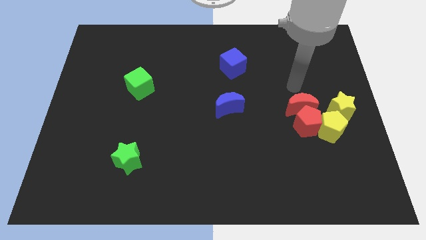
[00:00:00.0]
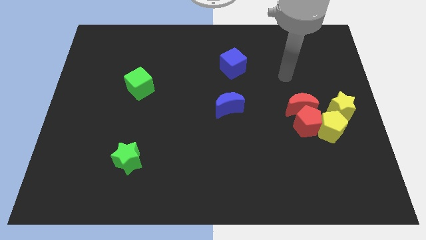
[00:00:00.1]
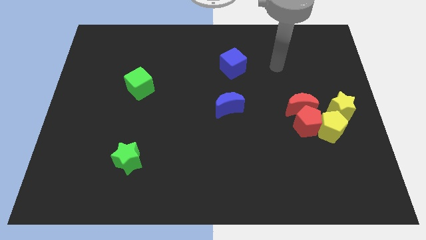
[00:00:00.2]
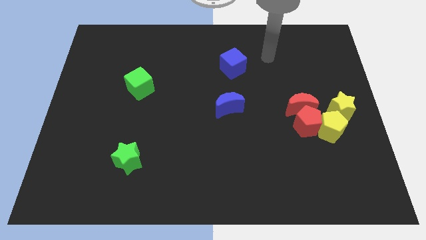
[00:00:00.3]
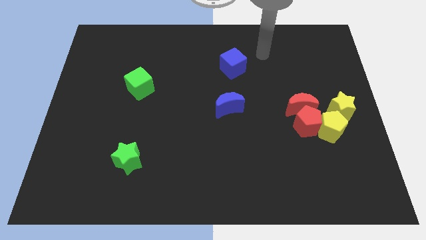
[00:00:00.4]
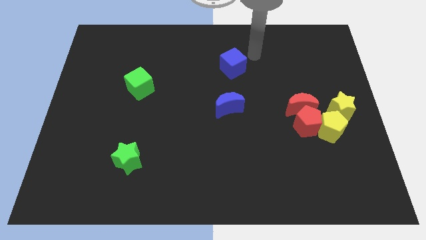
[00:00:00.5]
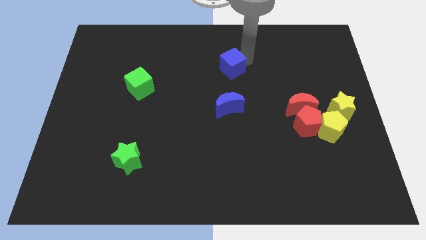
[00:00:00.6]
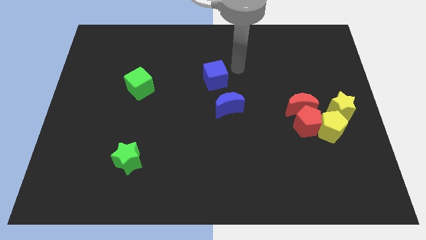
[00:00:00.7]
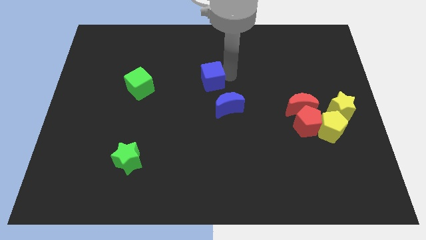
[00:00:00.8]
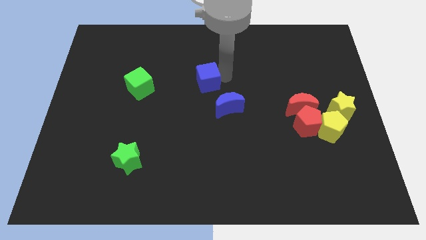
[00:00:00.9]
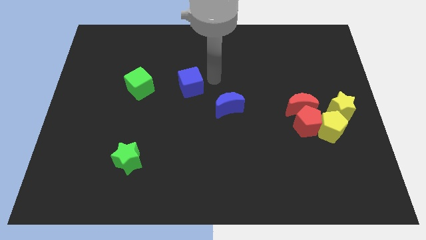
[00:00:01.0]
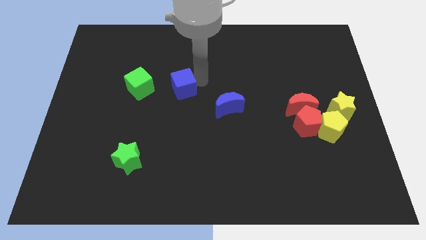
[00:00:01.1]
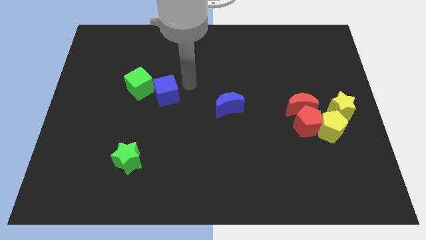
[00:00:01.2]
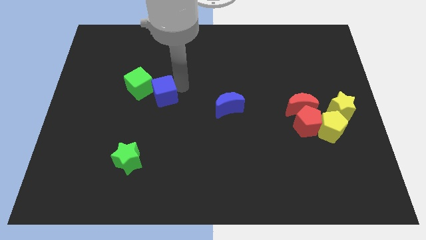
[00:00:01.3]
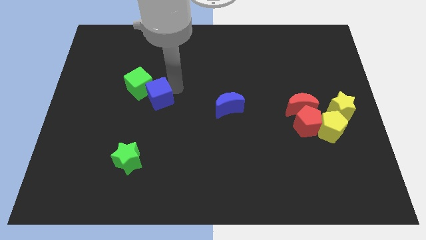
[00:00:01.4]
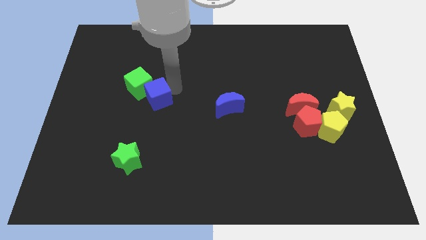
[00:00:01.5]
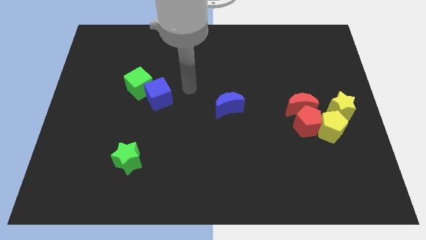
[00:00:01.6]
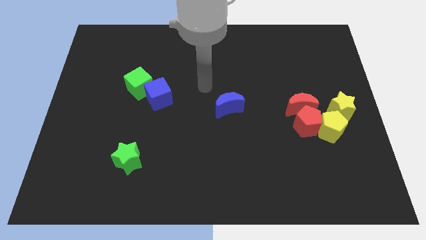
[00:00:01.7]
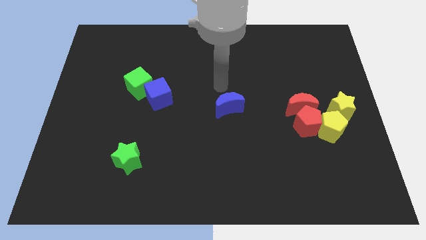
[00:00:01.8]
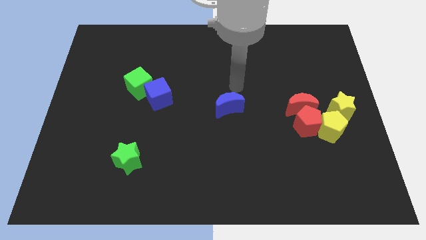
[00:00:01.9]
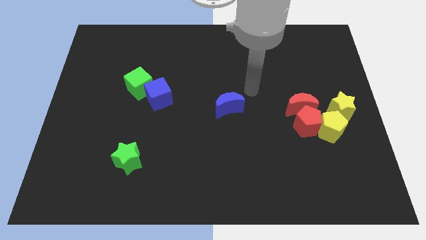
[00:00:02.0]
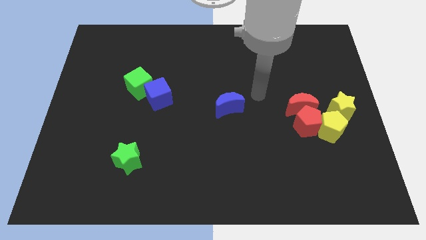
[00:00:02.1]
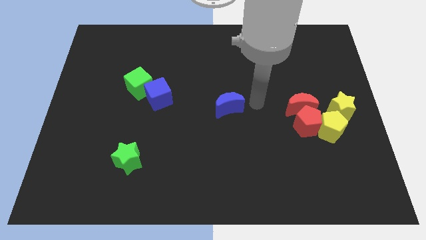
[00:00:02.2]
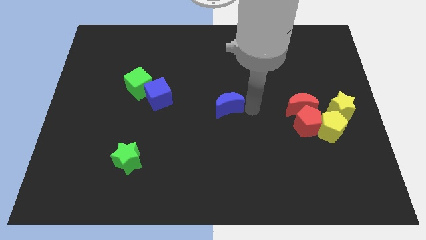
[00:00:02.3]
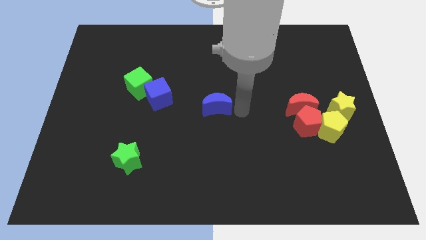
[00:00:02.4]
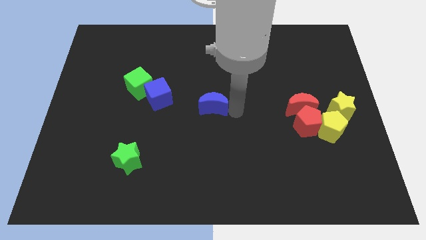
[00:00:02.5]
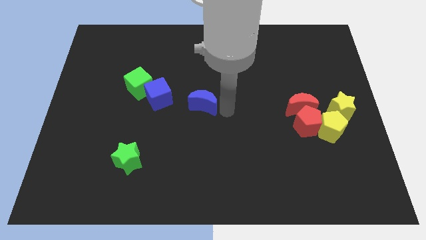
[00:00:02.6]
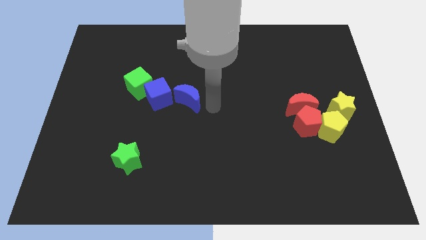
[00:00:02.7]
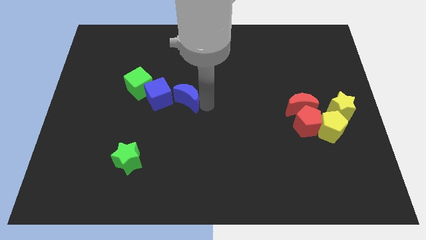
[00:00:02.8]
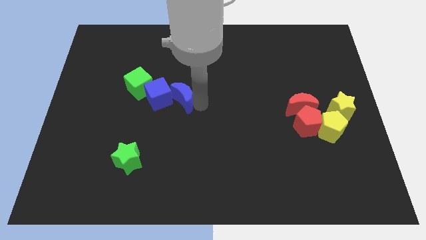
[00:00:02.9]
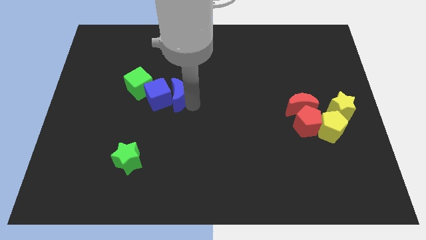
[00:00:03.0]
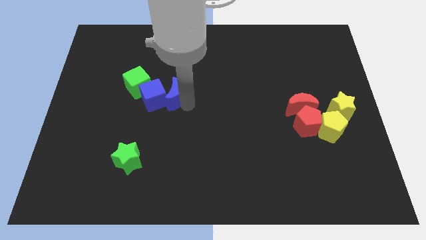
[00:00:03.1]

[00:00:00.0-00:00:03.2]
place the blue moon right to the blue cube

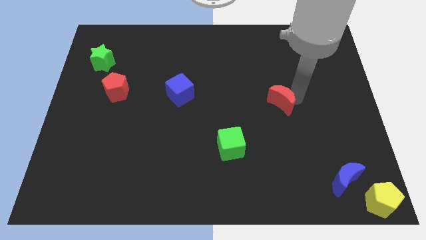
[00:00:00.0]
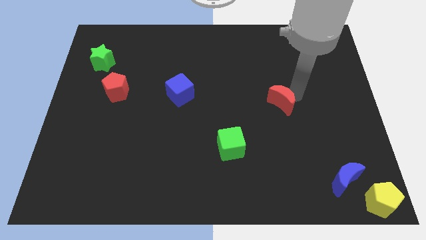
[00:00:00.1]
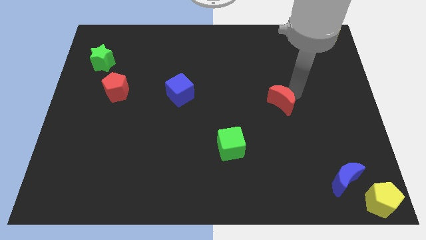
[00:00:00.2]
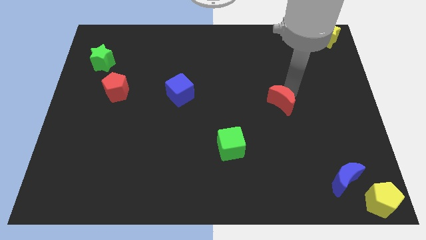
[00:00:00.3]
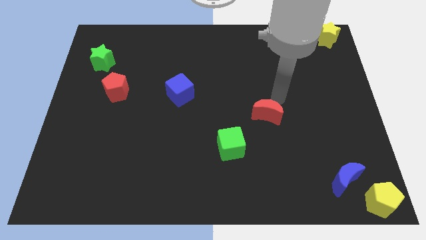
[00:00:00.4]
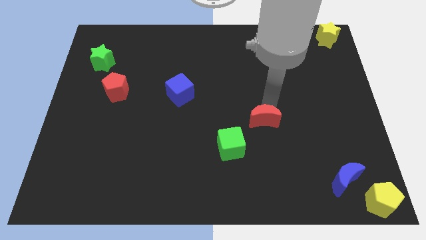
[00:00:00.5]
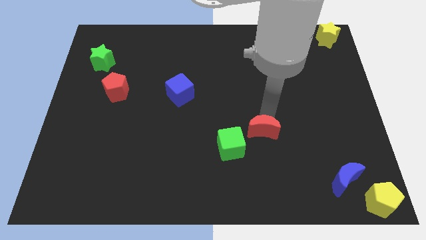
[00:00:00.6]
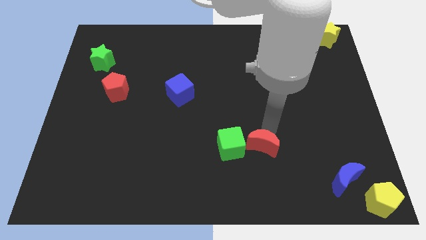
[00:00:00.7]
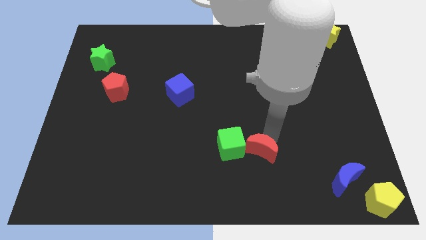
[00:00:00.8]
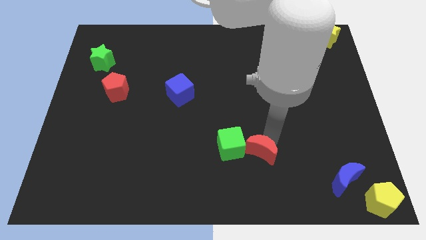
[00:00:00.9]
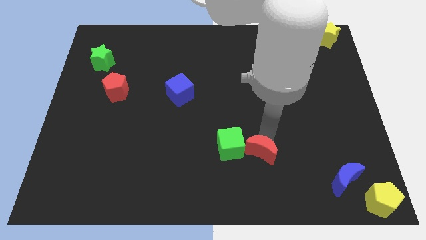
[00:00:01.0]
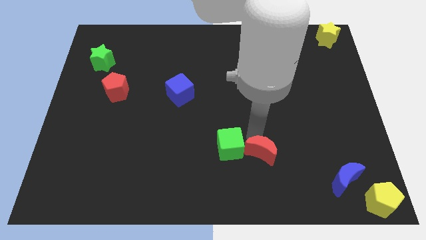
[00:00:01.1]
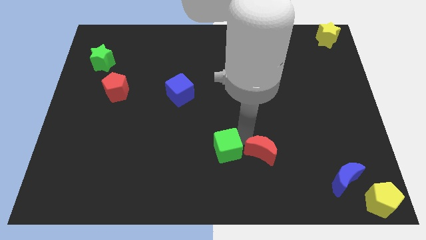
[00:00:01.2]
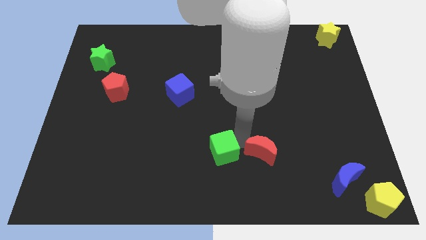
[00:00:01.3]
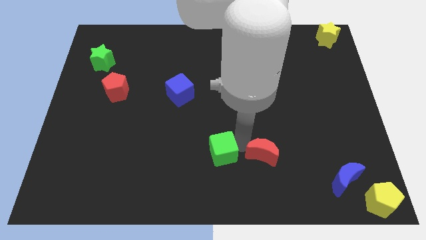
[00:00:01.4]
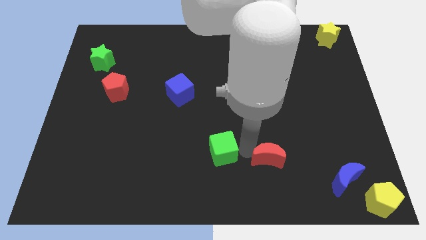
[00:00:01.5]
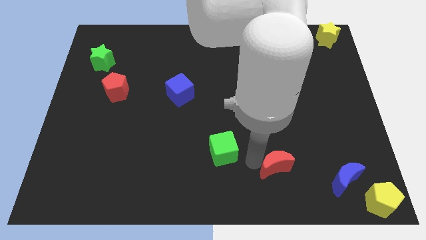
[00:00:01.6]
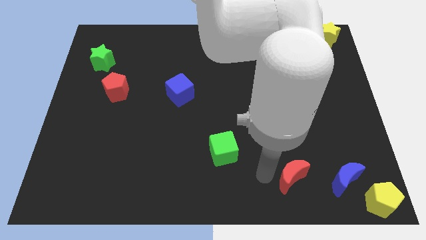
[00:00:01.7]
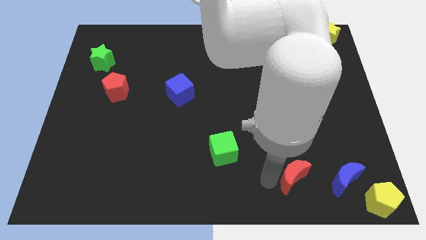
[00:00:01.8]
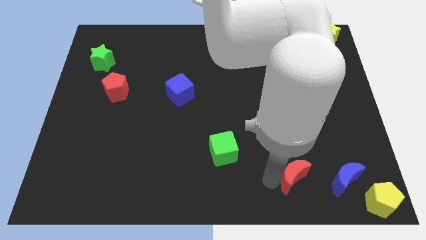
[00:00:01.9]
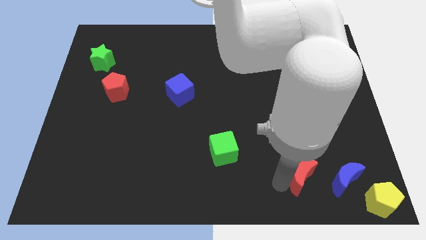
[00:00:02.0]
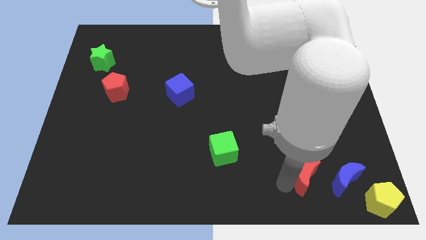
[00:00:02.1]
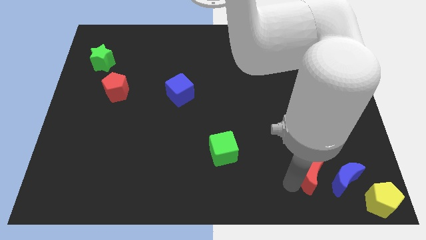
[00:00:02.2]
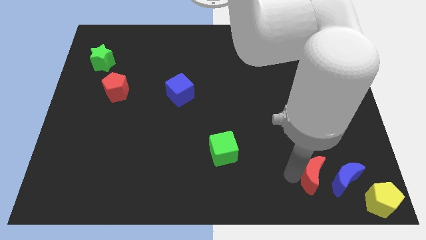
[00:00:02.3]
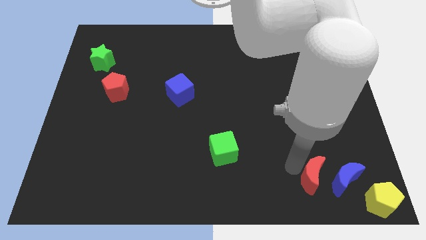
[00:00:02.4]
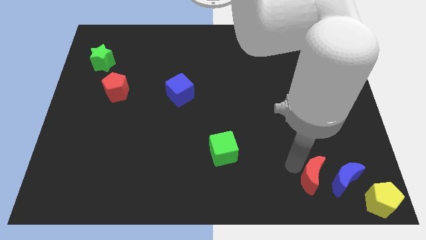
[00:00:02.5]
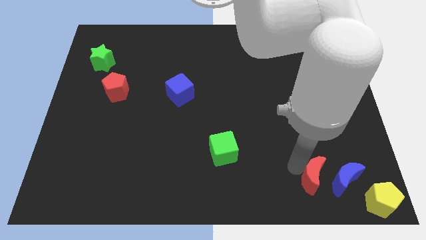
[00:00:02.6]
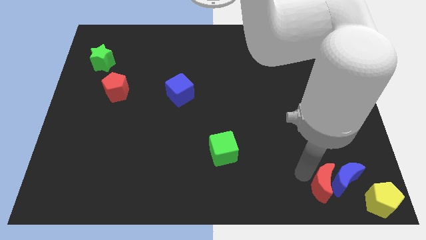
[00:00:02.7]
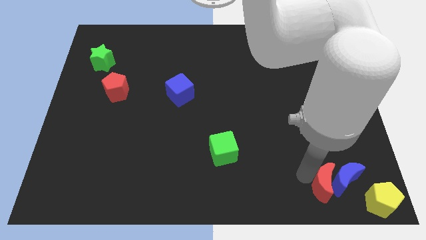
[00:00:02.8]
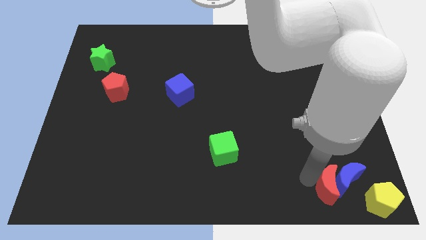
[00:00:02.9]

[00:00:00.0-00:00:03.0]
move the red moon into blue moon

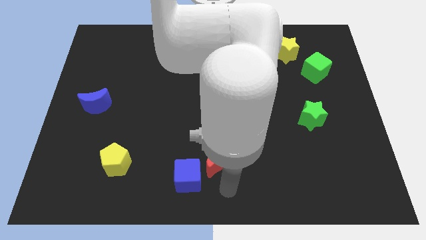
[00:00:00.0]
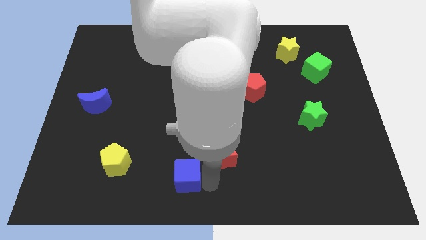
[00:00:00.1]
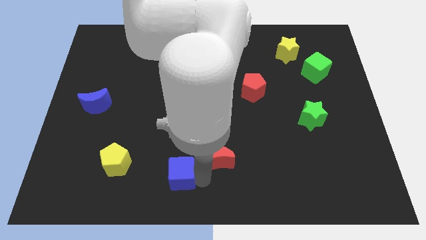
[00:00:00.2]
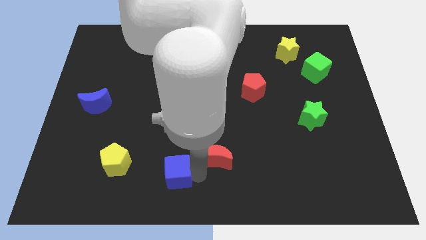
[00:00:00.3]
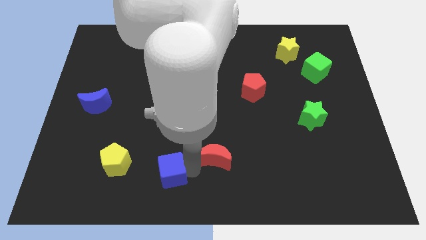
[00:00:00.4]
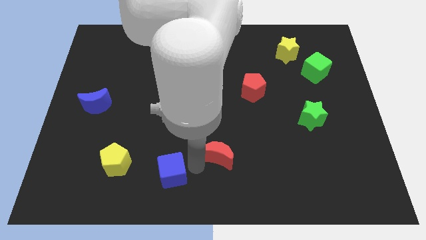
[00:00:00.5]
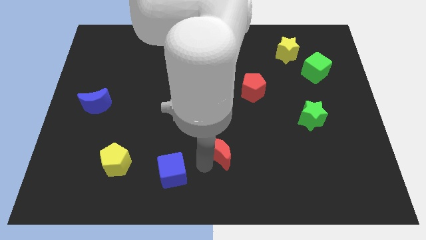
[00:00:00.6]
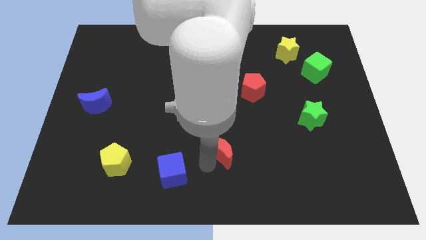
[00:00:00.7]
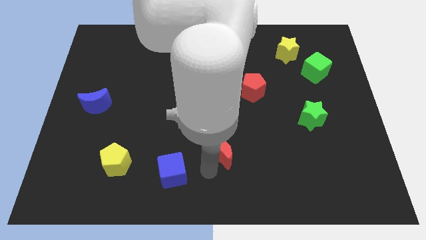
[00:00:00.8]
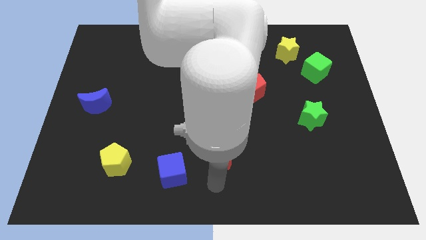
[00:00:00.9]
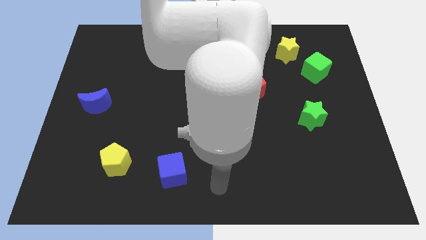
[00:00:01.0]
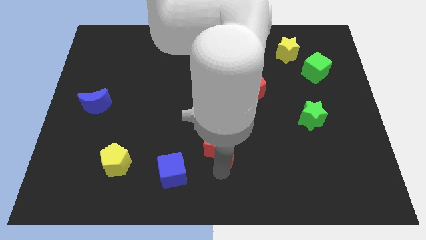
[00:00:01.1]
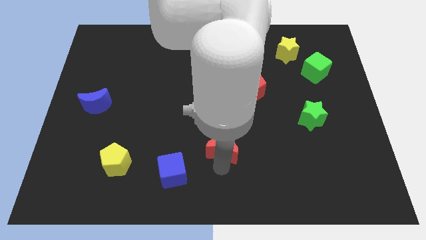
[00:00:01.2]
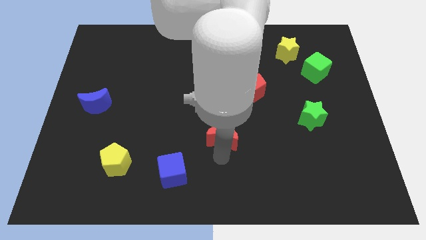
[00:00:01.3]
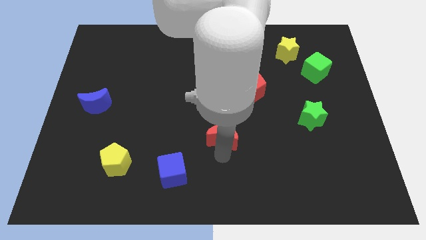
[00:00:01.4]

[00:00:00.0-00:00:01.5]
separate the red moon from the blue cube

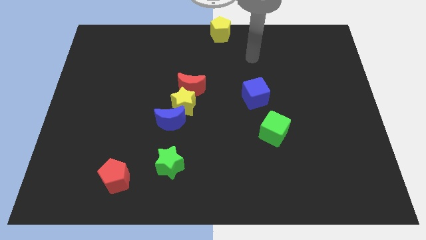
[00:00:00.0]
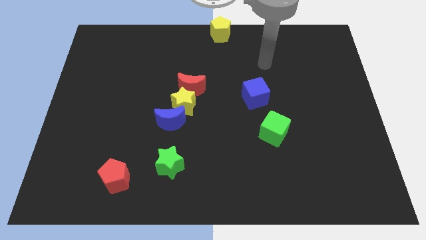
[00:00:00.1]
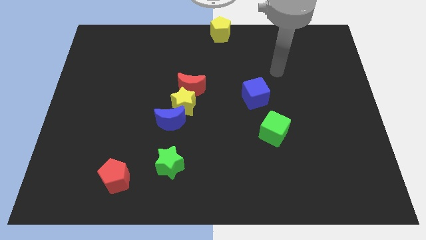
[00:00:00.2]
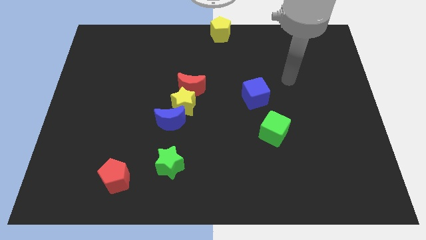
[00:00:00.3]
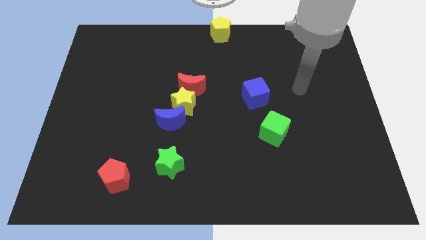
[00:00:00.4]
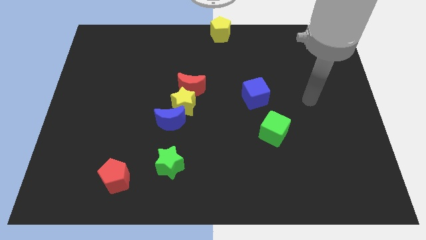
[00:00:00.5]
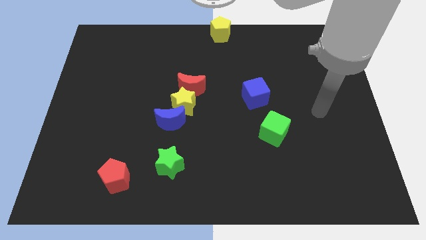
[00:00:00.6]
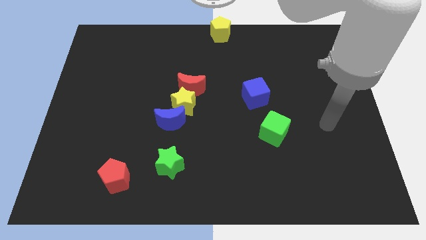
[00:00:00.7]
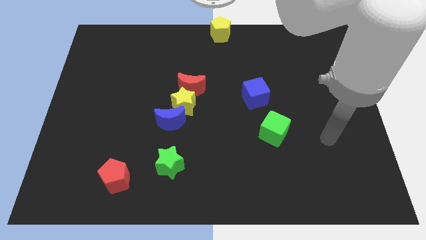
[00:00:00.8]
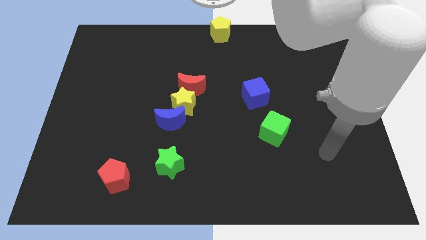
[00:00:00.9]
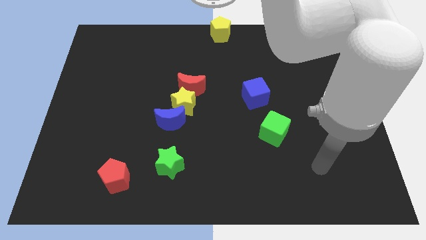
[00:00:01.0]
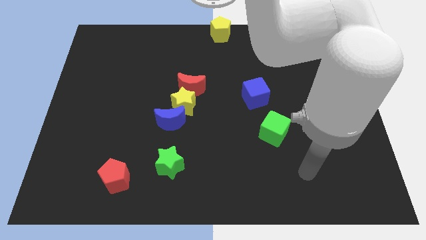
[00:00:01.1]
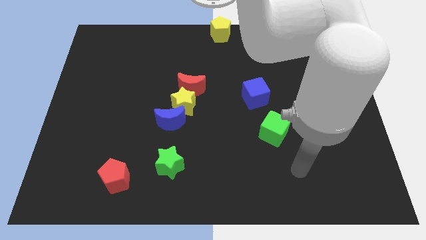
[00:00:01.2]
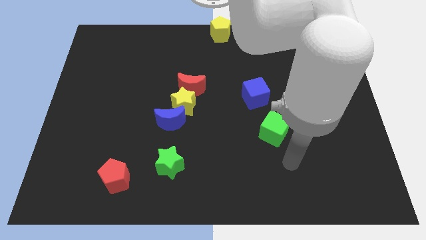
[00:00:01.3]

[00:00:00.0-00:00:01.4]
move your arm away from the yellow pentagon
